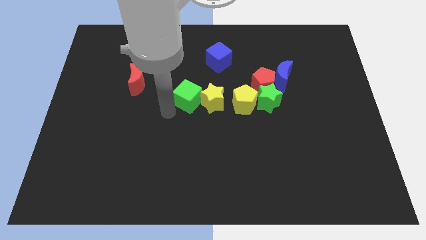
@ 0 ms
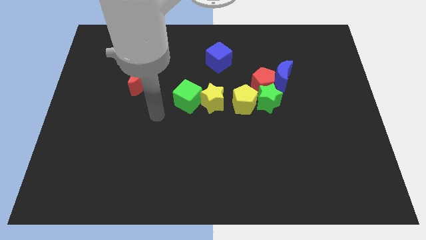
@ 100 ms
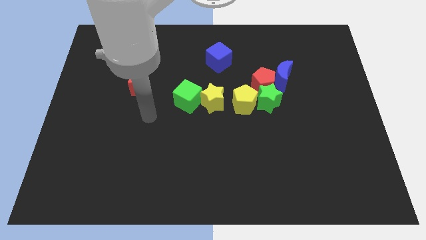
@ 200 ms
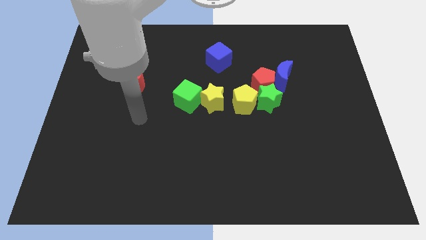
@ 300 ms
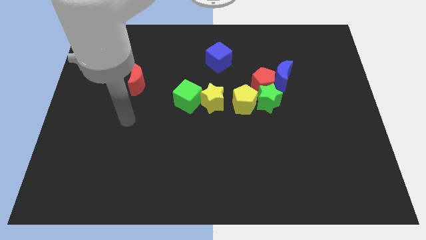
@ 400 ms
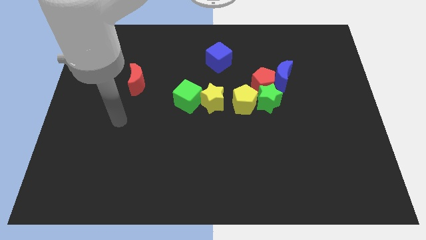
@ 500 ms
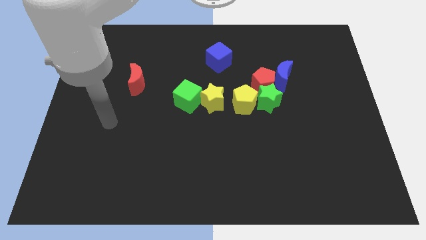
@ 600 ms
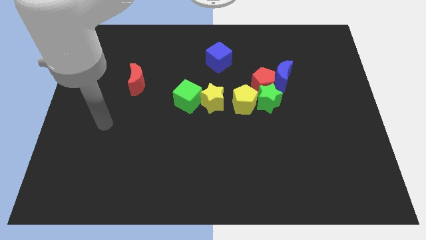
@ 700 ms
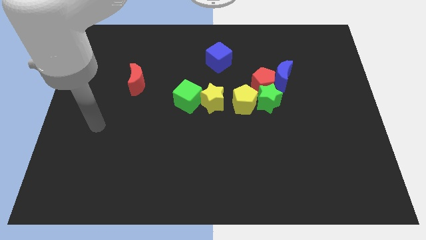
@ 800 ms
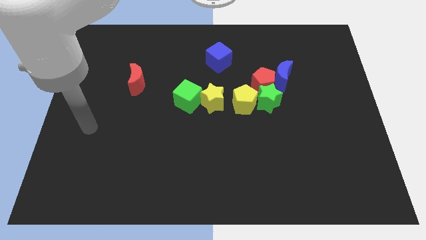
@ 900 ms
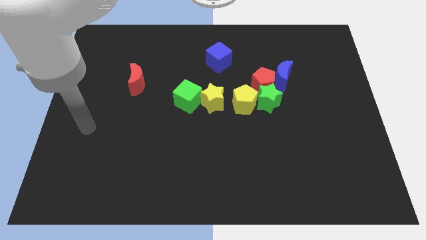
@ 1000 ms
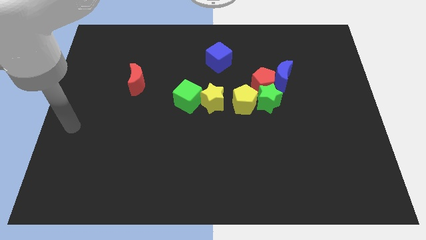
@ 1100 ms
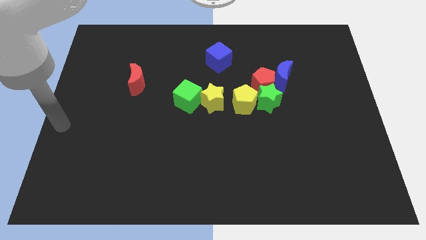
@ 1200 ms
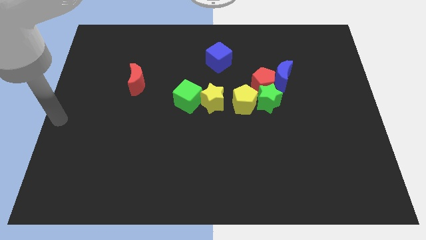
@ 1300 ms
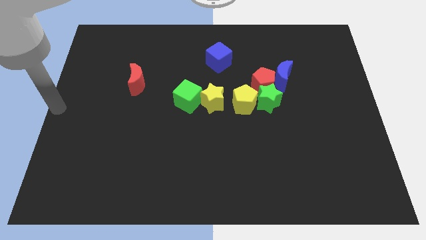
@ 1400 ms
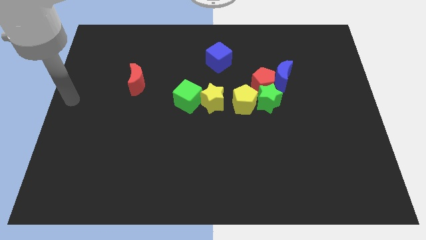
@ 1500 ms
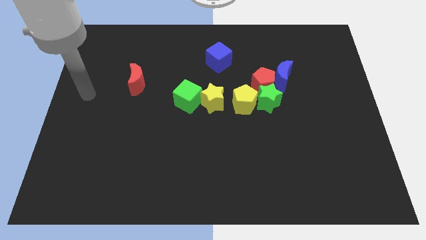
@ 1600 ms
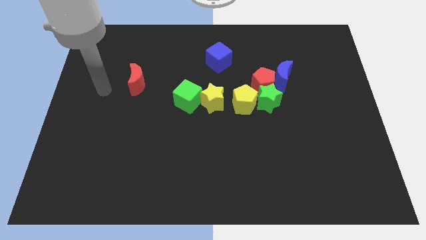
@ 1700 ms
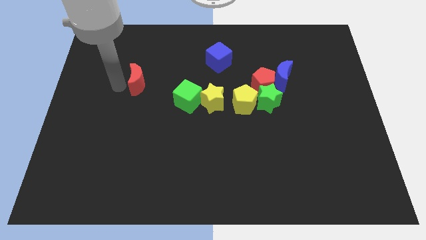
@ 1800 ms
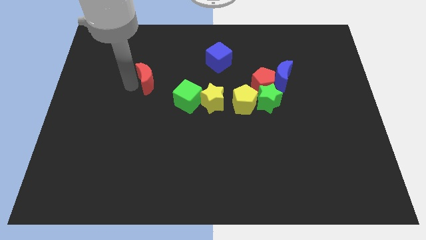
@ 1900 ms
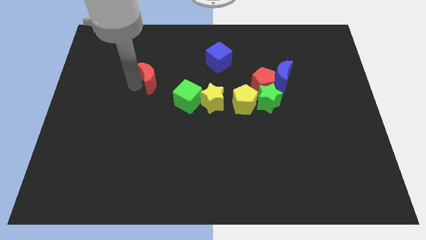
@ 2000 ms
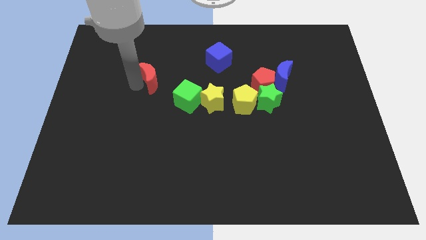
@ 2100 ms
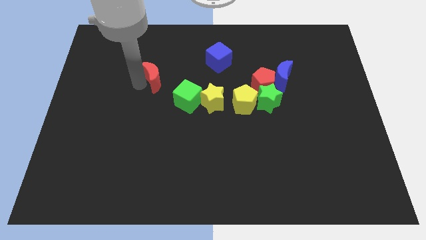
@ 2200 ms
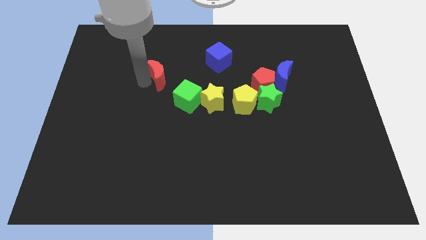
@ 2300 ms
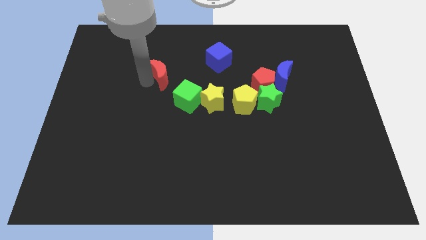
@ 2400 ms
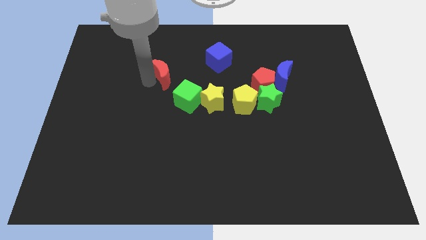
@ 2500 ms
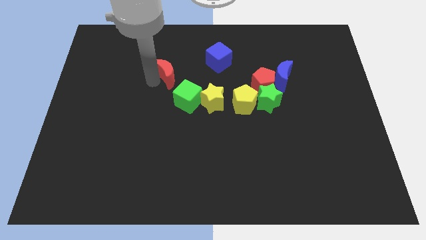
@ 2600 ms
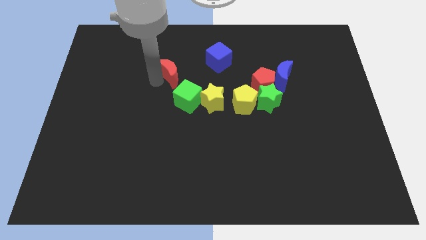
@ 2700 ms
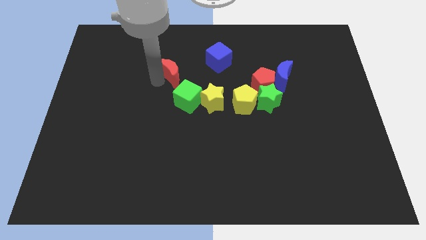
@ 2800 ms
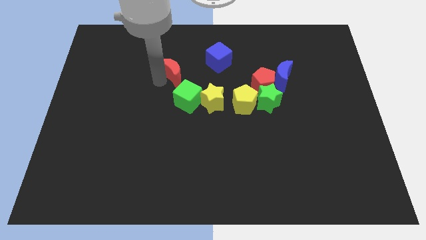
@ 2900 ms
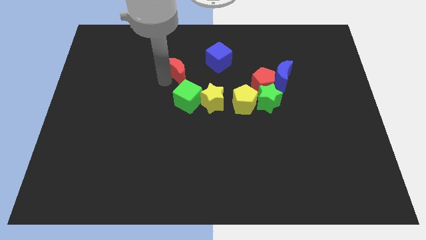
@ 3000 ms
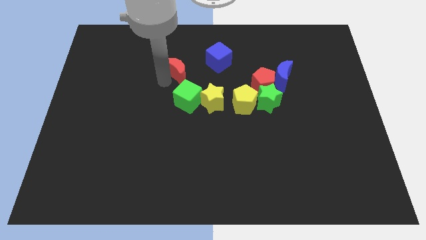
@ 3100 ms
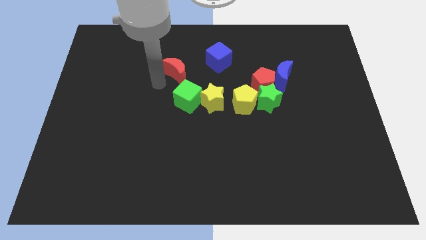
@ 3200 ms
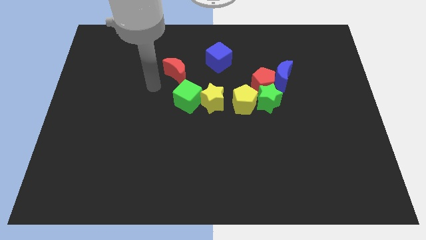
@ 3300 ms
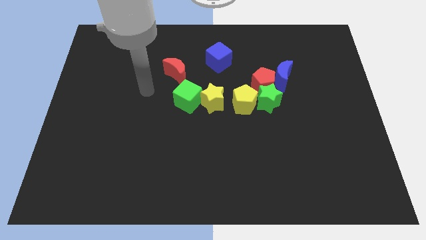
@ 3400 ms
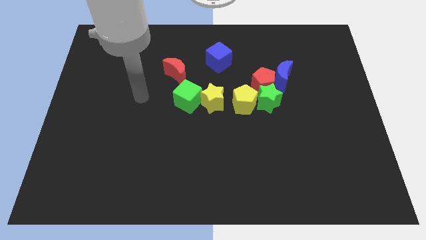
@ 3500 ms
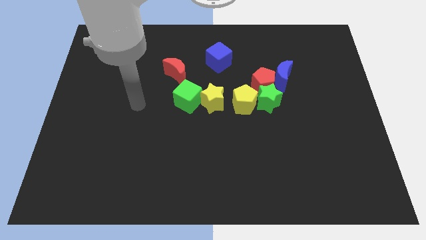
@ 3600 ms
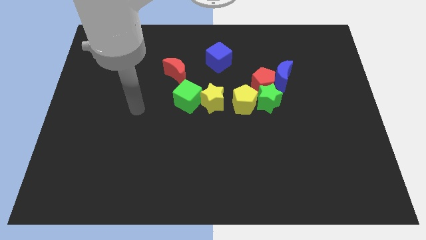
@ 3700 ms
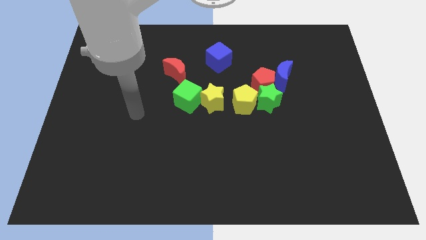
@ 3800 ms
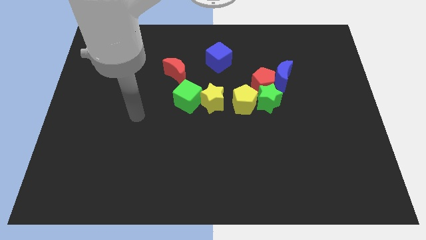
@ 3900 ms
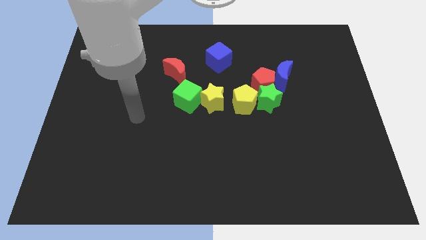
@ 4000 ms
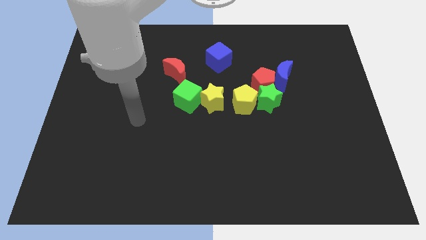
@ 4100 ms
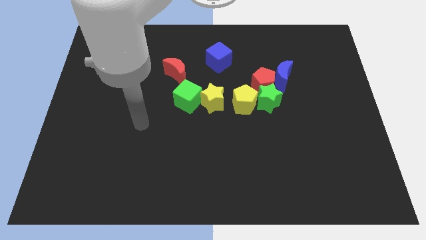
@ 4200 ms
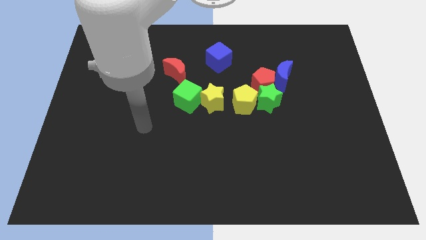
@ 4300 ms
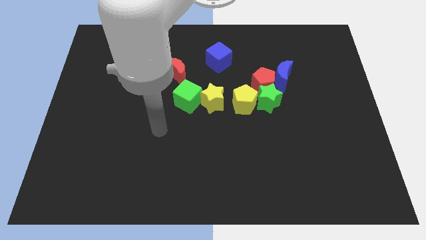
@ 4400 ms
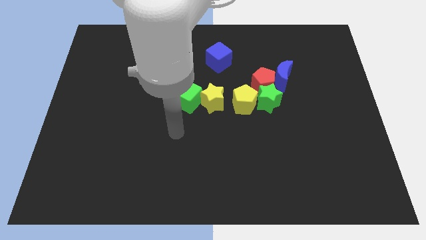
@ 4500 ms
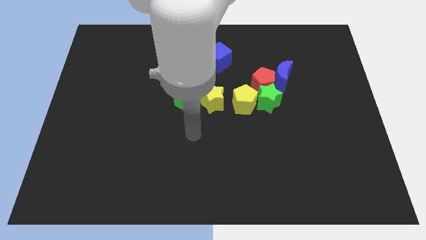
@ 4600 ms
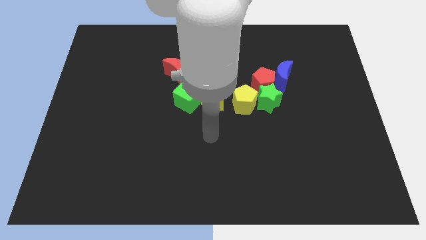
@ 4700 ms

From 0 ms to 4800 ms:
place the red crescent above the green cube

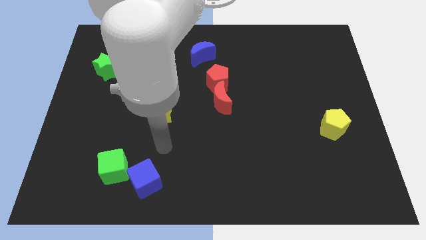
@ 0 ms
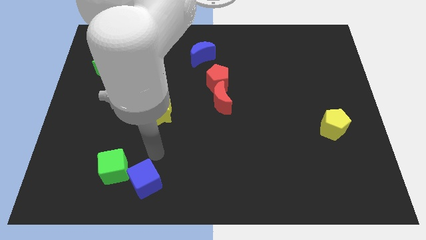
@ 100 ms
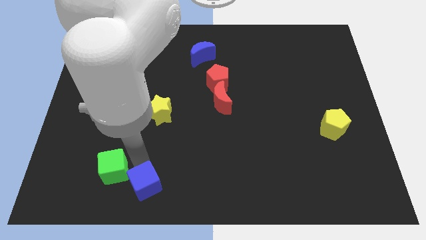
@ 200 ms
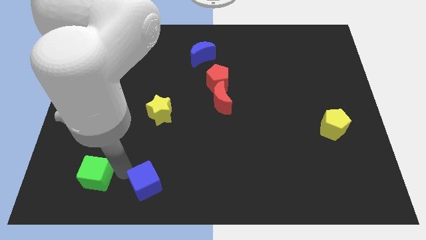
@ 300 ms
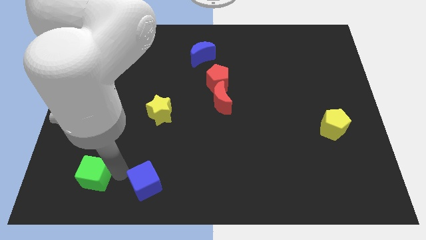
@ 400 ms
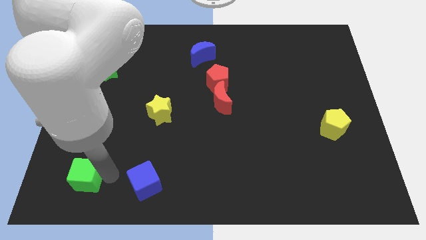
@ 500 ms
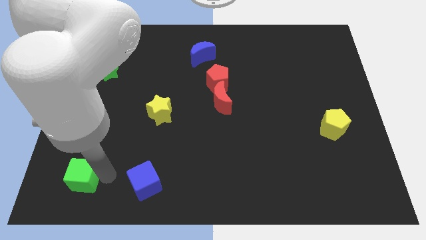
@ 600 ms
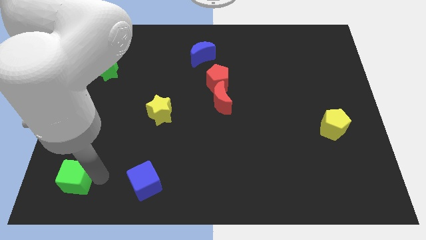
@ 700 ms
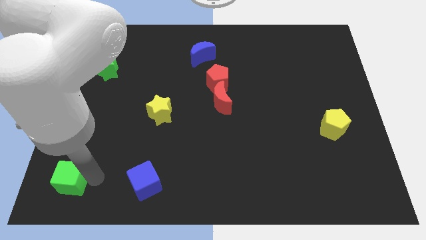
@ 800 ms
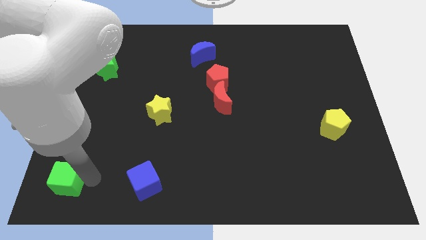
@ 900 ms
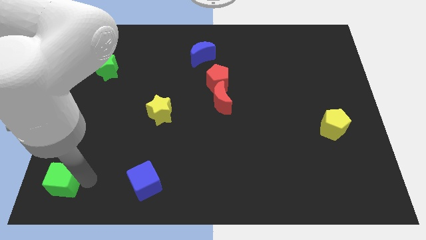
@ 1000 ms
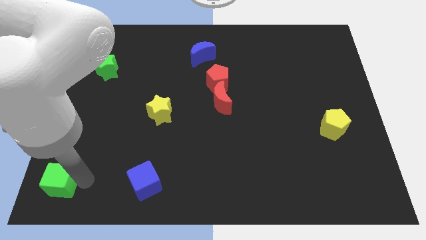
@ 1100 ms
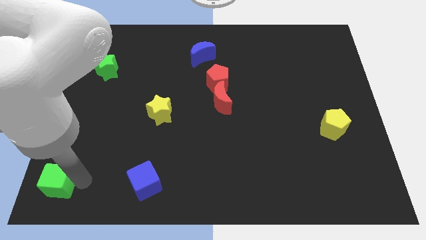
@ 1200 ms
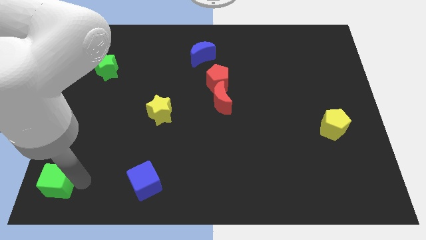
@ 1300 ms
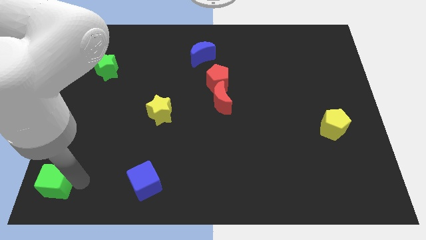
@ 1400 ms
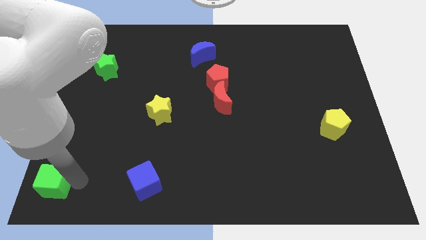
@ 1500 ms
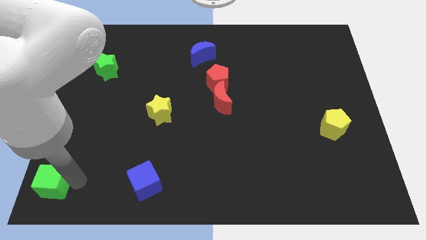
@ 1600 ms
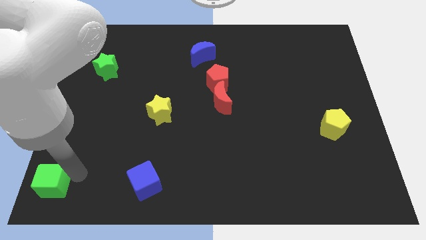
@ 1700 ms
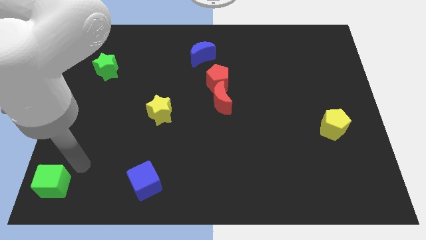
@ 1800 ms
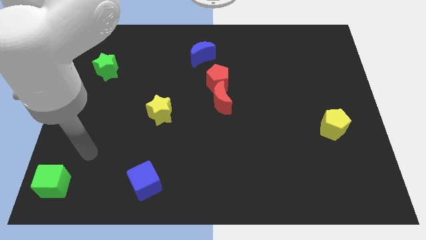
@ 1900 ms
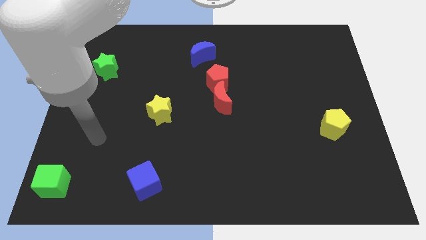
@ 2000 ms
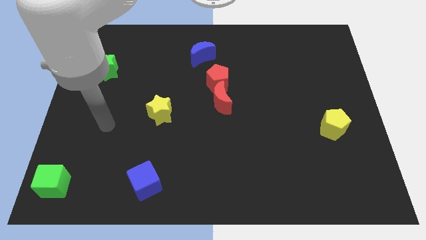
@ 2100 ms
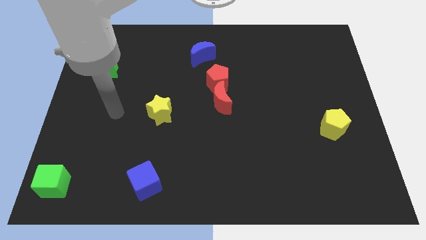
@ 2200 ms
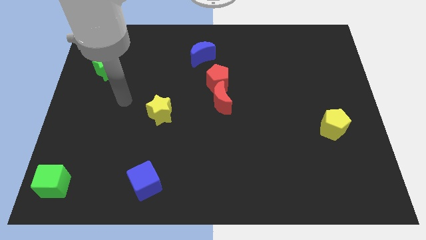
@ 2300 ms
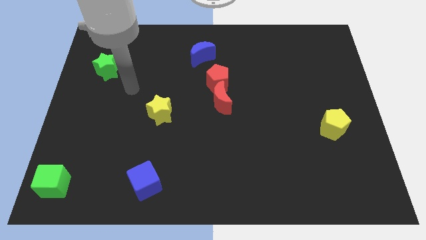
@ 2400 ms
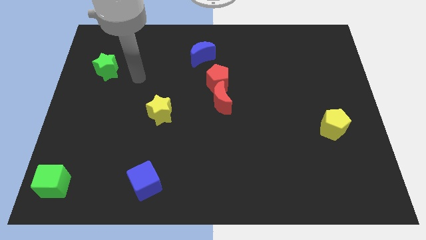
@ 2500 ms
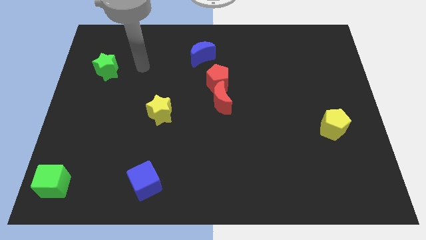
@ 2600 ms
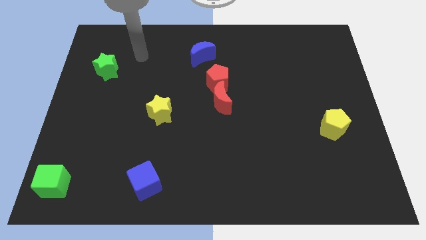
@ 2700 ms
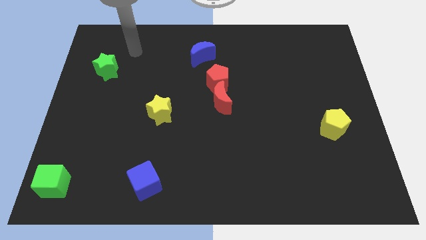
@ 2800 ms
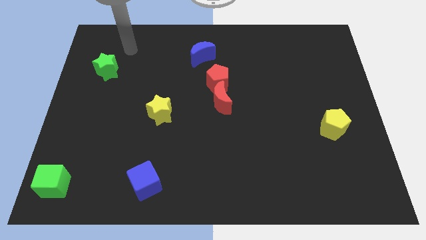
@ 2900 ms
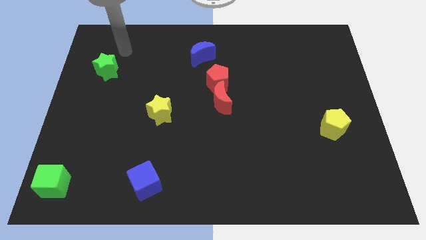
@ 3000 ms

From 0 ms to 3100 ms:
move the green cube to the bottom left

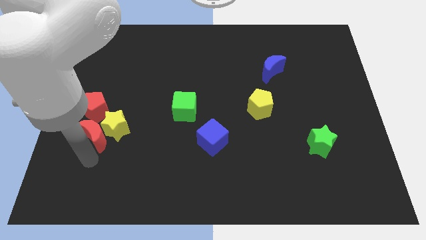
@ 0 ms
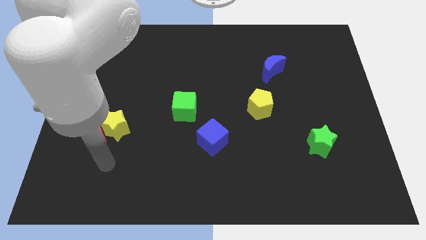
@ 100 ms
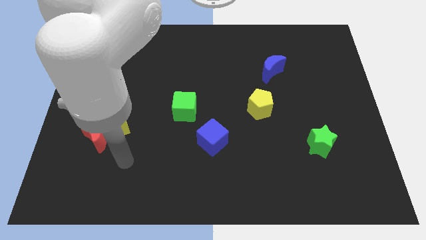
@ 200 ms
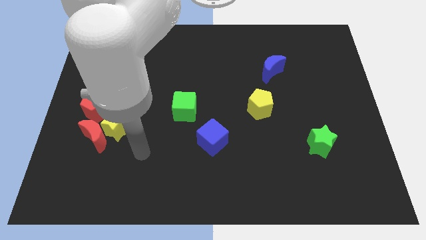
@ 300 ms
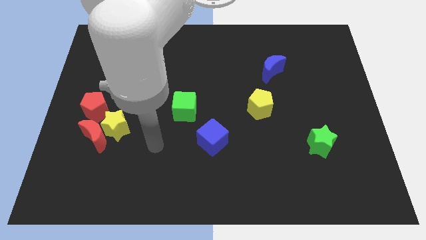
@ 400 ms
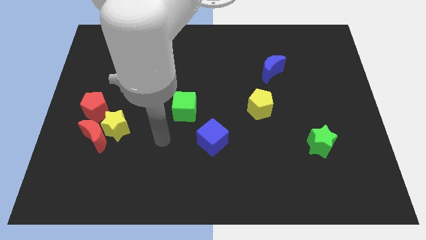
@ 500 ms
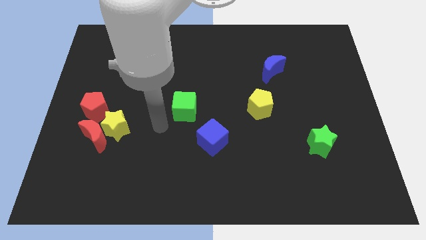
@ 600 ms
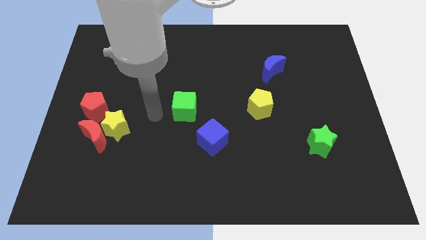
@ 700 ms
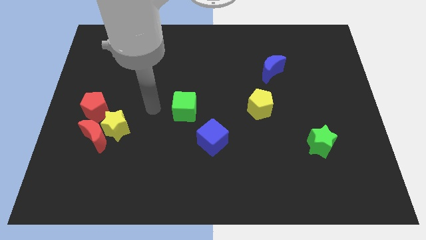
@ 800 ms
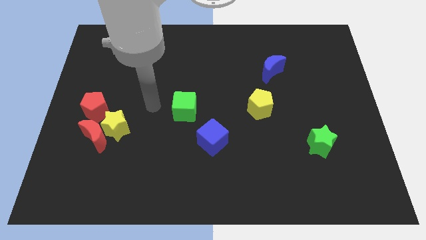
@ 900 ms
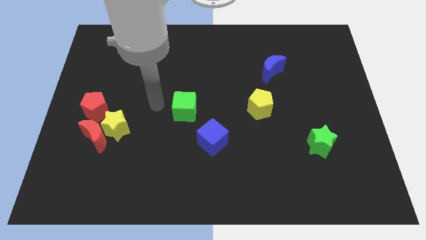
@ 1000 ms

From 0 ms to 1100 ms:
point your arm at the left of the green cube
